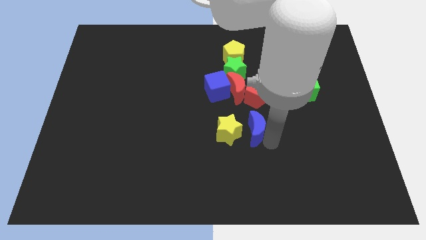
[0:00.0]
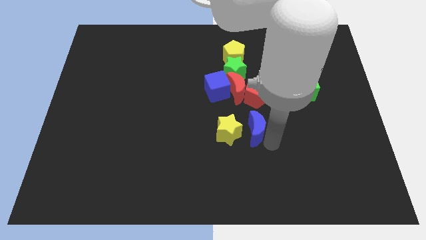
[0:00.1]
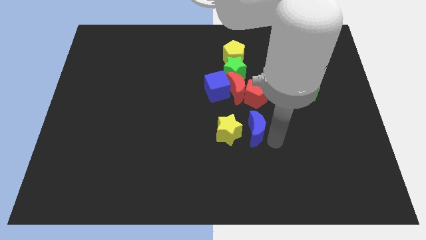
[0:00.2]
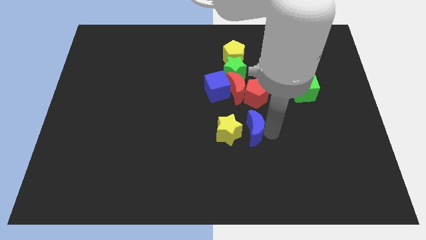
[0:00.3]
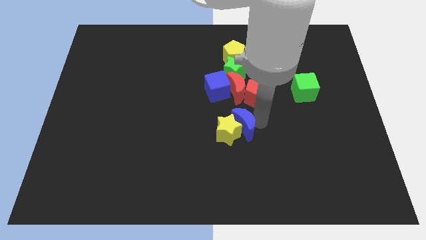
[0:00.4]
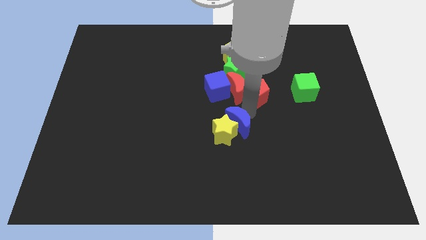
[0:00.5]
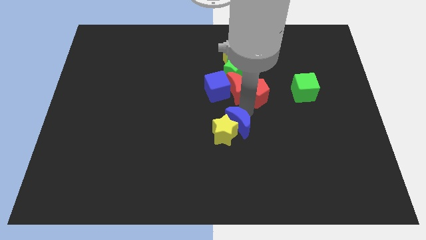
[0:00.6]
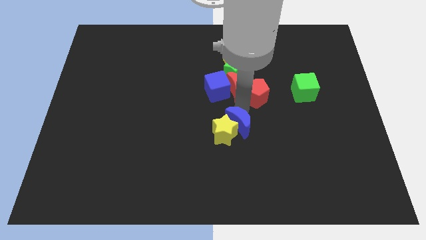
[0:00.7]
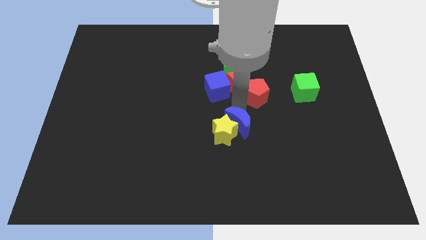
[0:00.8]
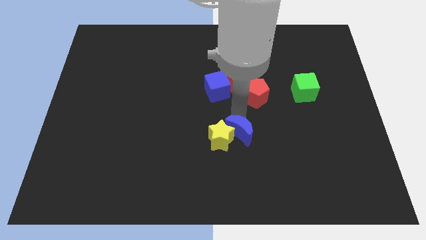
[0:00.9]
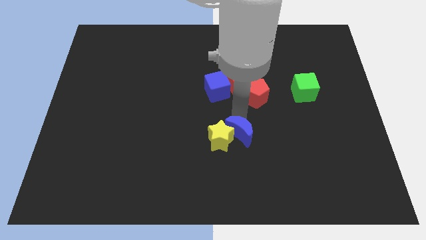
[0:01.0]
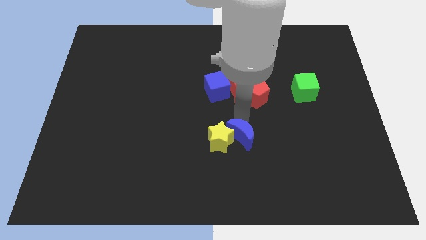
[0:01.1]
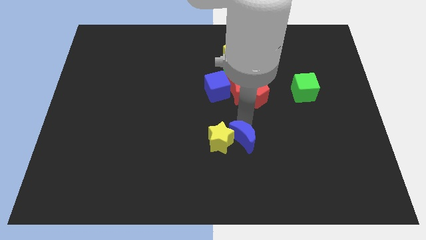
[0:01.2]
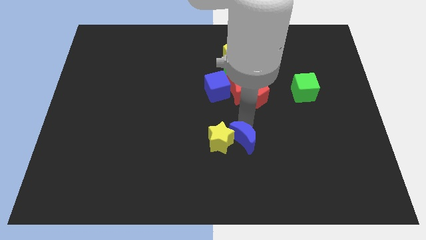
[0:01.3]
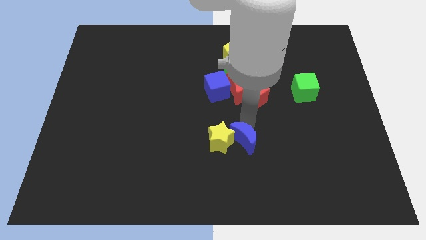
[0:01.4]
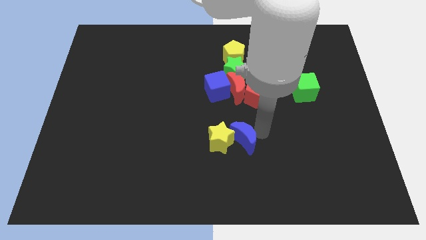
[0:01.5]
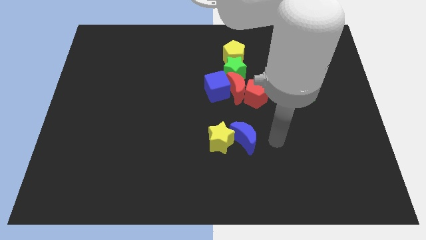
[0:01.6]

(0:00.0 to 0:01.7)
push the blue crescent into the yellow star

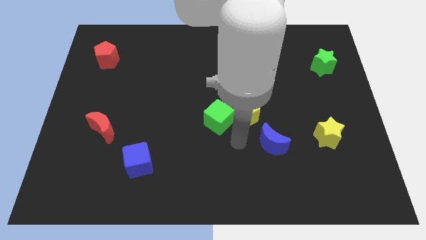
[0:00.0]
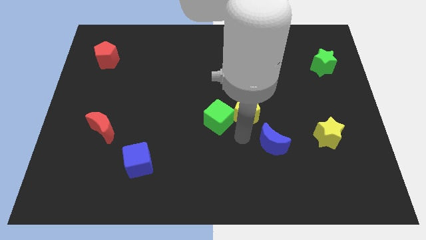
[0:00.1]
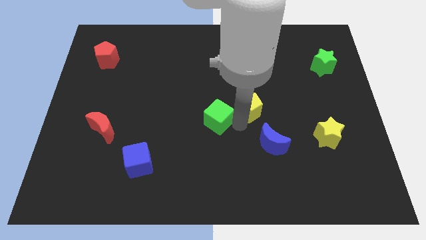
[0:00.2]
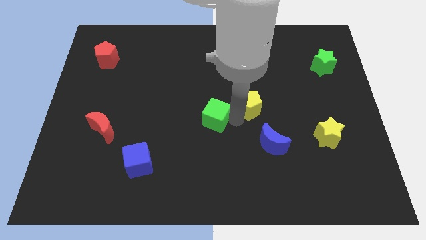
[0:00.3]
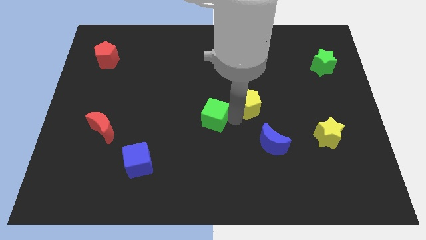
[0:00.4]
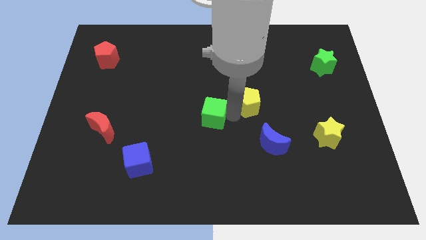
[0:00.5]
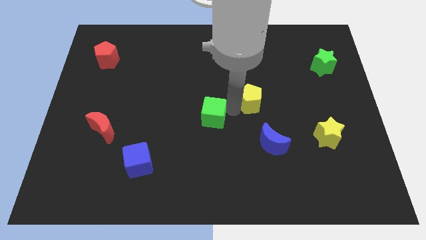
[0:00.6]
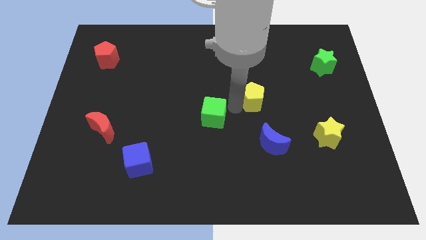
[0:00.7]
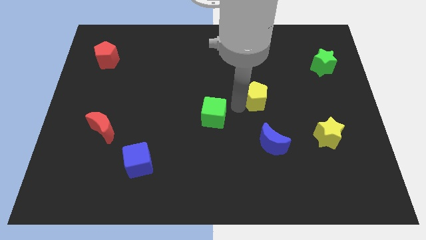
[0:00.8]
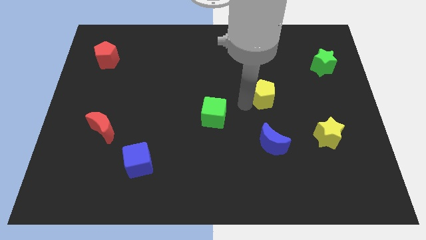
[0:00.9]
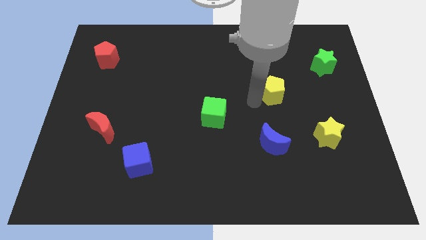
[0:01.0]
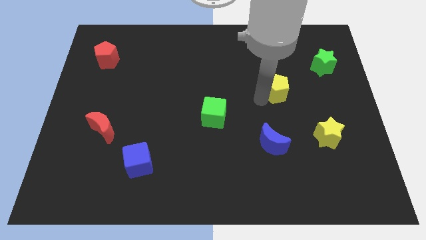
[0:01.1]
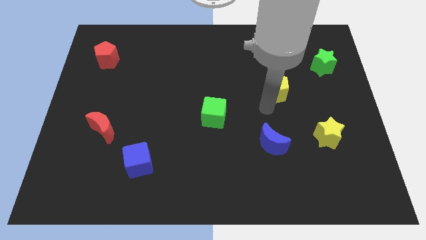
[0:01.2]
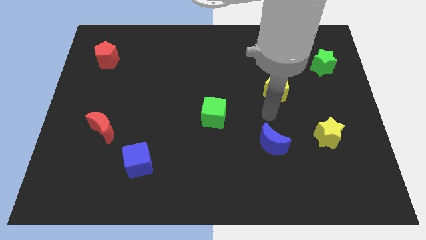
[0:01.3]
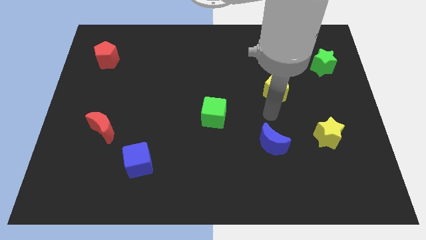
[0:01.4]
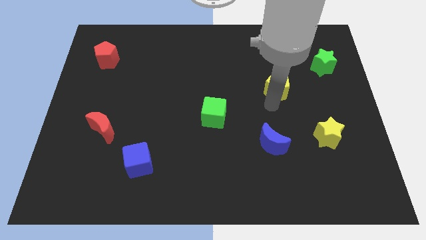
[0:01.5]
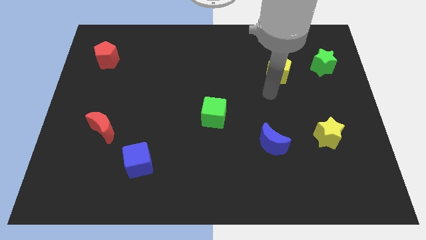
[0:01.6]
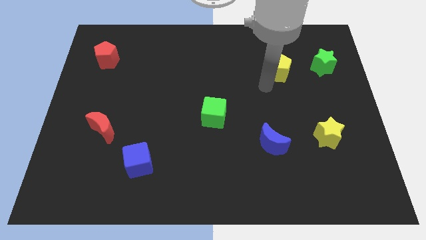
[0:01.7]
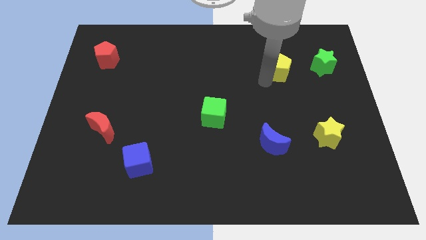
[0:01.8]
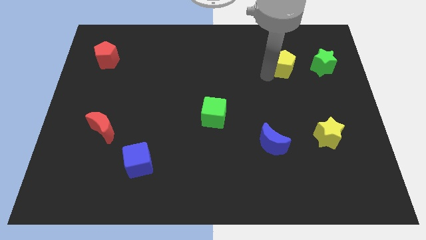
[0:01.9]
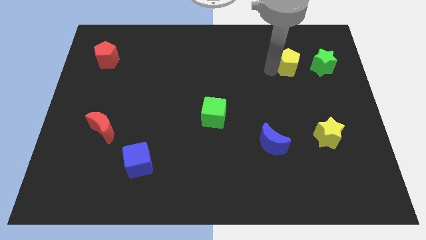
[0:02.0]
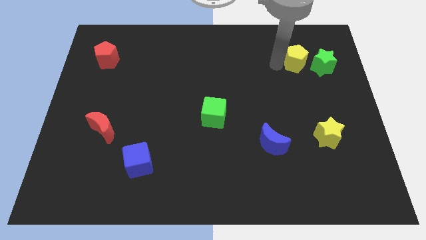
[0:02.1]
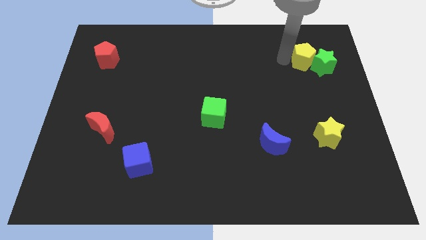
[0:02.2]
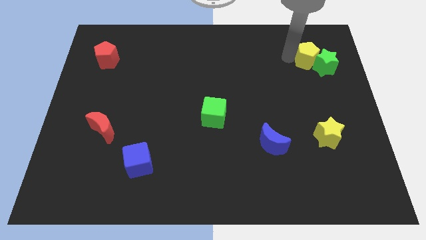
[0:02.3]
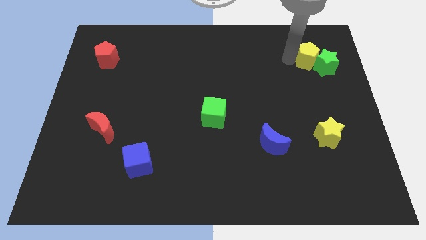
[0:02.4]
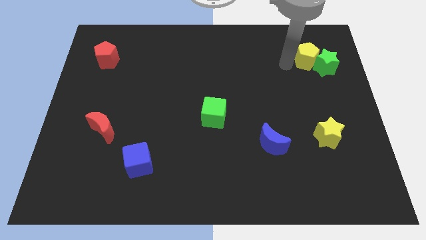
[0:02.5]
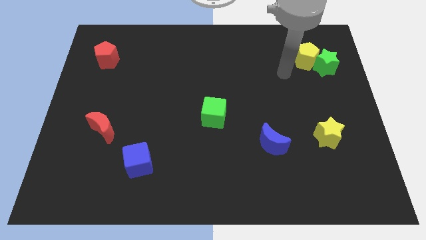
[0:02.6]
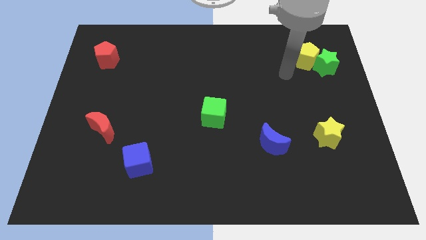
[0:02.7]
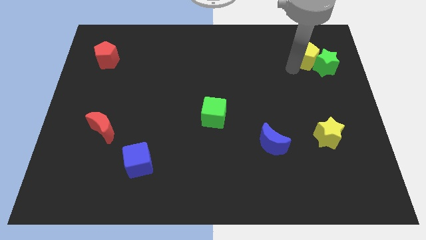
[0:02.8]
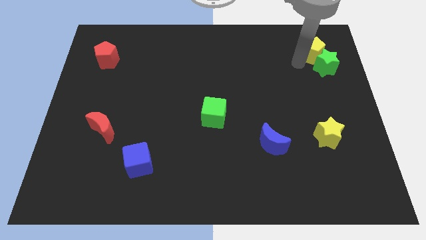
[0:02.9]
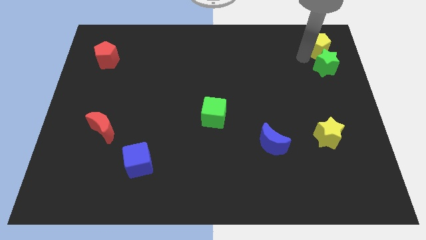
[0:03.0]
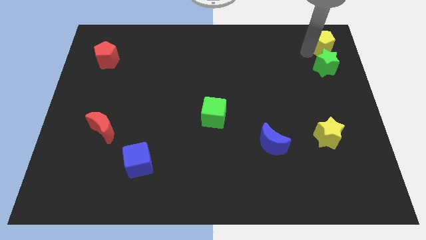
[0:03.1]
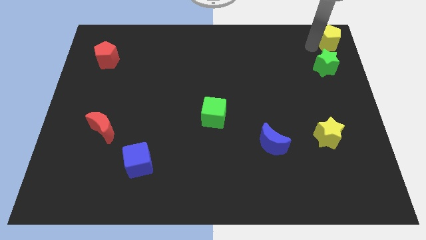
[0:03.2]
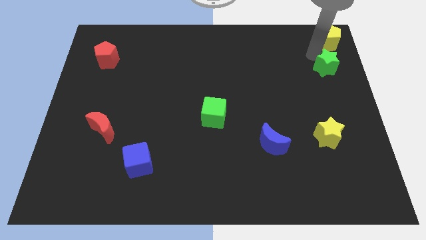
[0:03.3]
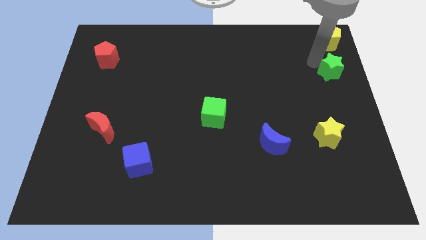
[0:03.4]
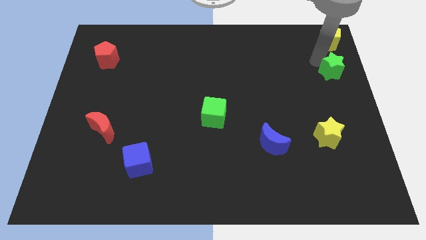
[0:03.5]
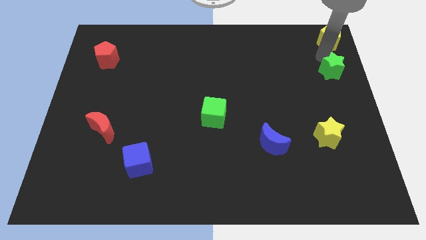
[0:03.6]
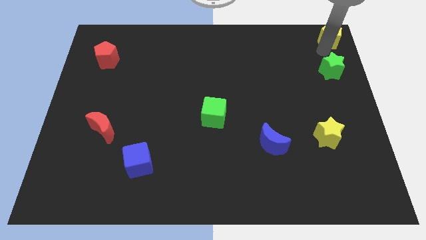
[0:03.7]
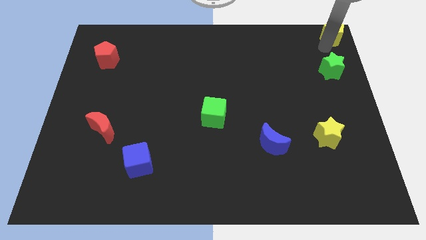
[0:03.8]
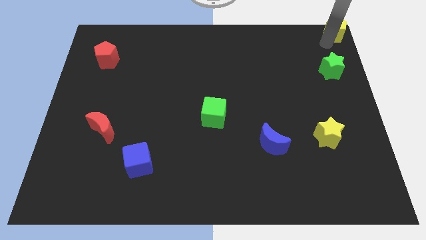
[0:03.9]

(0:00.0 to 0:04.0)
place the yellow pentagon above the green star

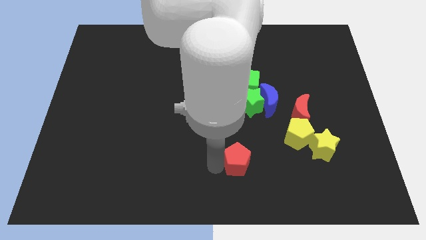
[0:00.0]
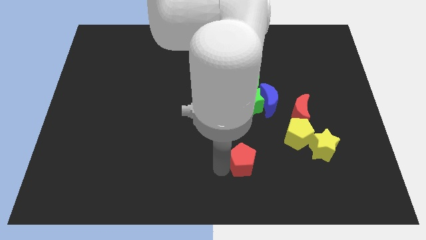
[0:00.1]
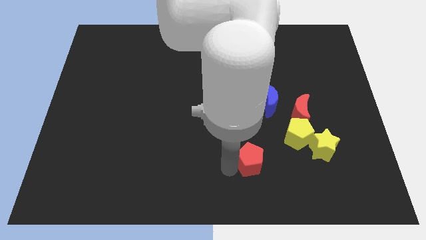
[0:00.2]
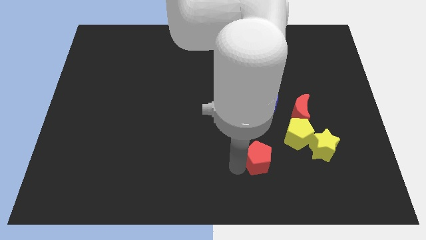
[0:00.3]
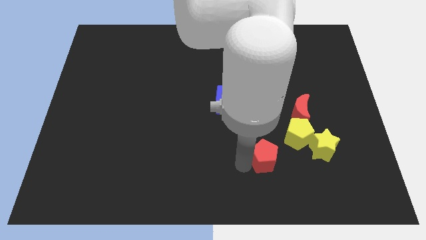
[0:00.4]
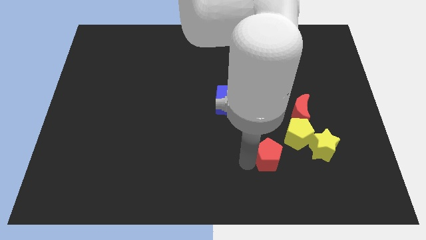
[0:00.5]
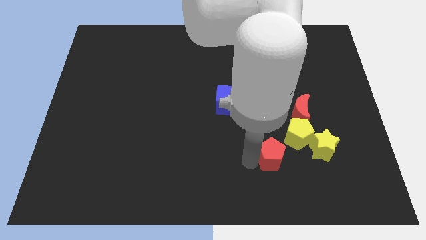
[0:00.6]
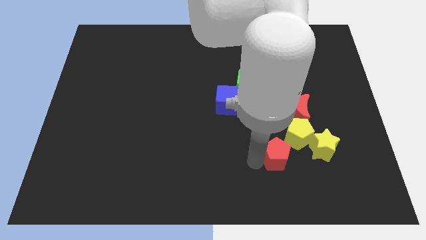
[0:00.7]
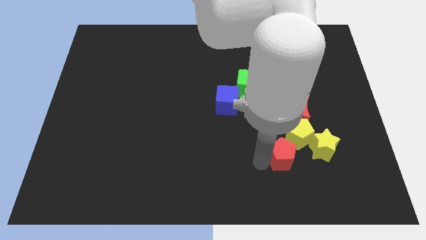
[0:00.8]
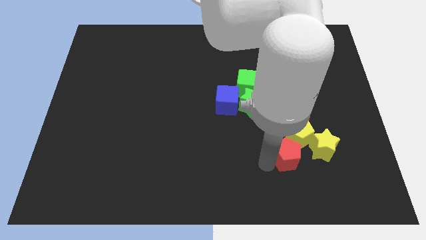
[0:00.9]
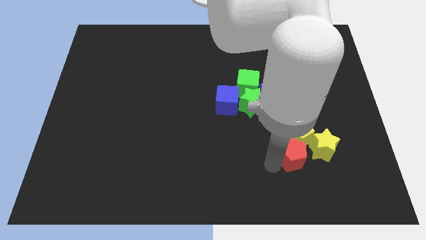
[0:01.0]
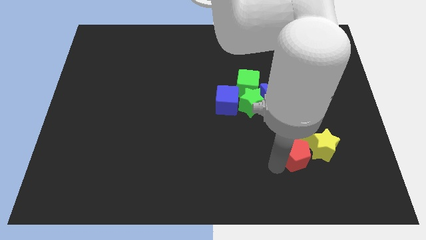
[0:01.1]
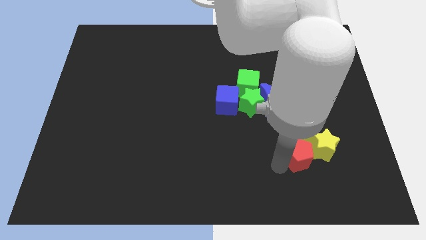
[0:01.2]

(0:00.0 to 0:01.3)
move the red pentagon into the yellow blocks

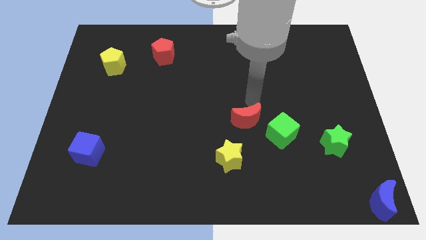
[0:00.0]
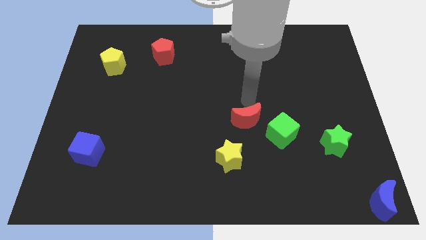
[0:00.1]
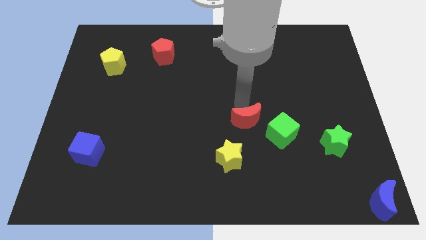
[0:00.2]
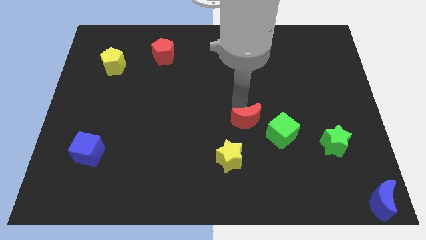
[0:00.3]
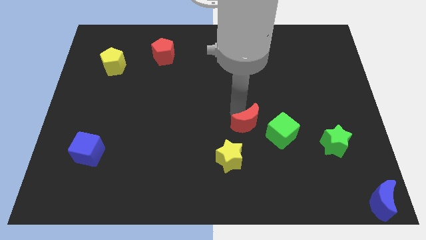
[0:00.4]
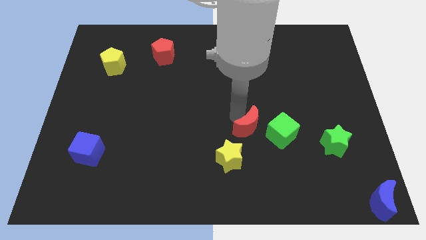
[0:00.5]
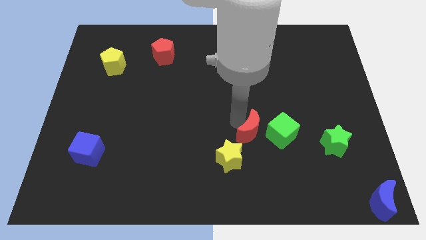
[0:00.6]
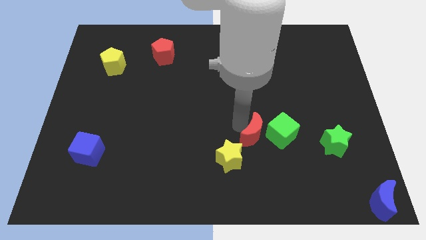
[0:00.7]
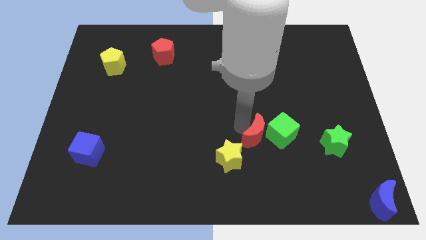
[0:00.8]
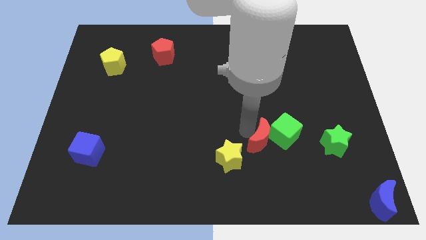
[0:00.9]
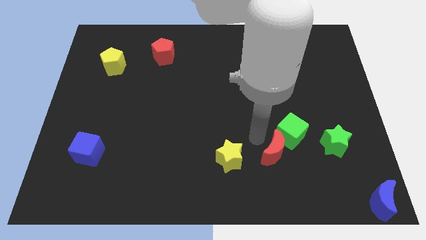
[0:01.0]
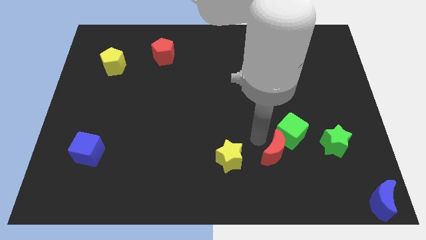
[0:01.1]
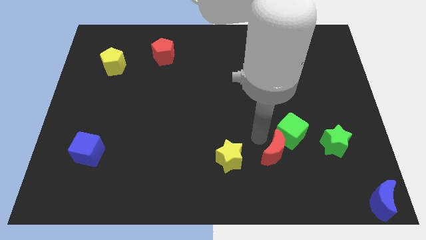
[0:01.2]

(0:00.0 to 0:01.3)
move the red crescent to the bottom left of the green cube

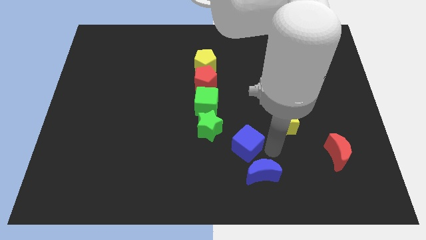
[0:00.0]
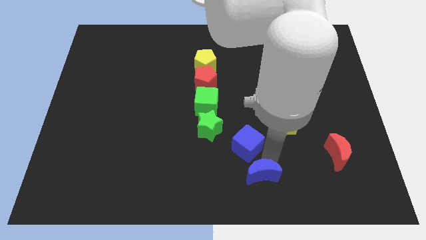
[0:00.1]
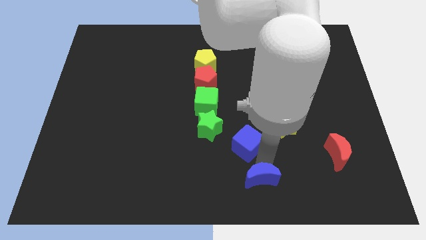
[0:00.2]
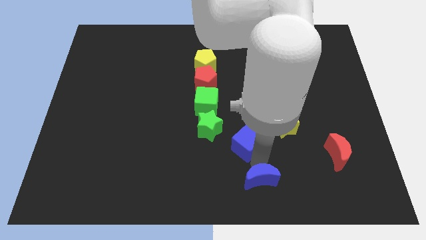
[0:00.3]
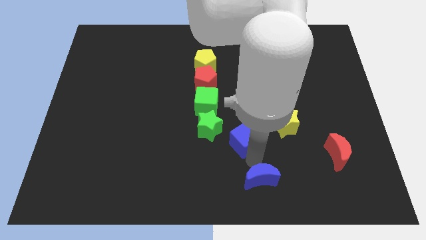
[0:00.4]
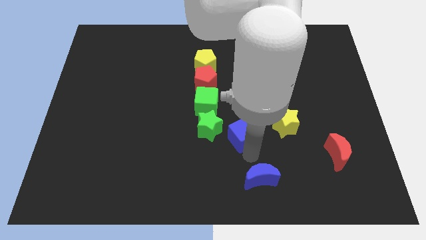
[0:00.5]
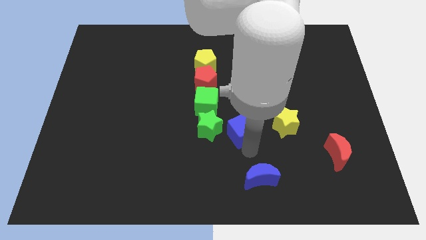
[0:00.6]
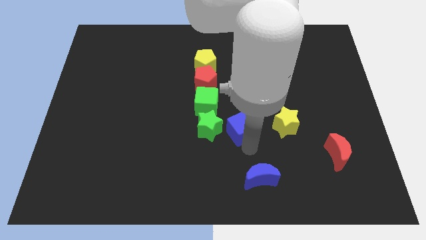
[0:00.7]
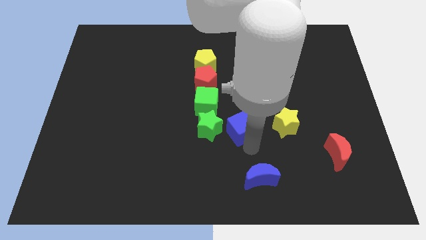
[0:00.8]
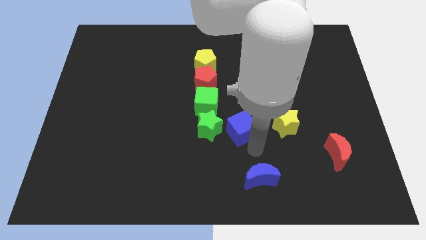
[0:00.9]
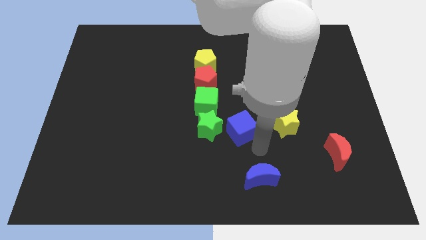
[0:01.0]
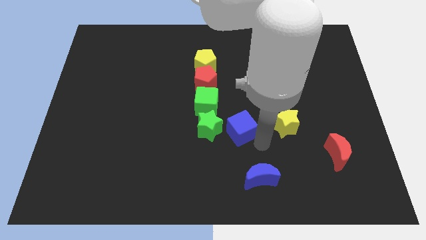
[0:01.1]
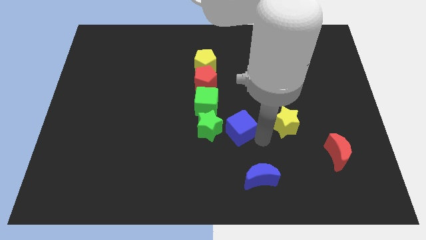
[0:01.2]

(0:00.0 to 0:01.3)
place blue cube to the right of the green star
